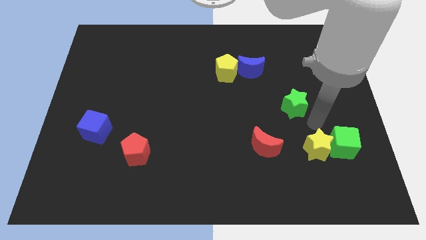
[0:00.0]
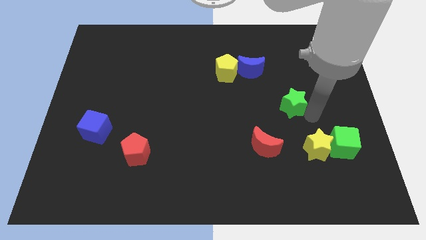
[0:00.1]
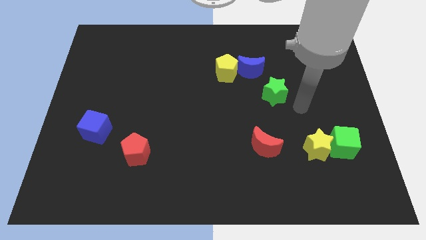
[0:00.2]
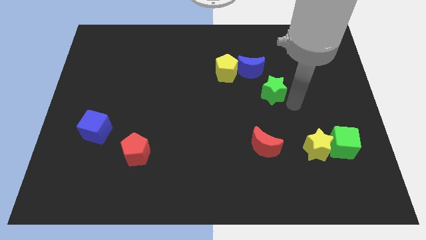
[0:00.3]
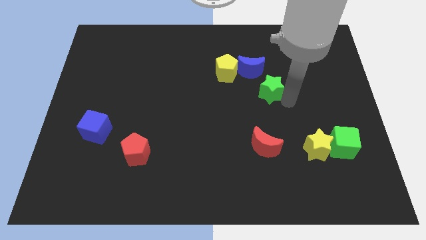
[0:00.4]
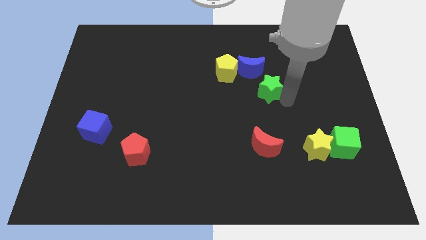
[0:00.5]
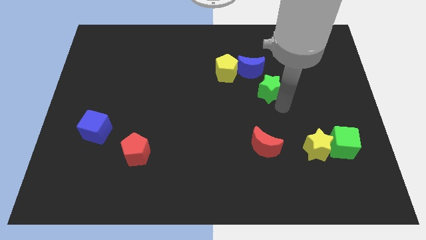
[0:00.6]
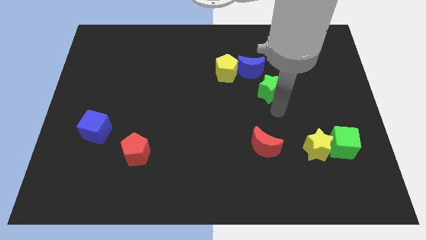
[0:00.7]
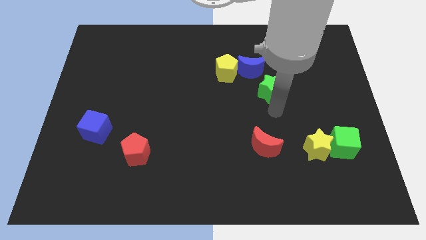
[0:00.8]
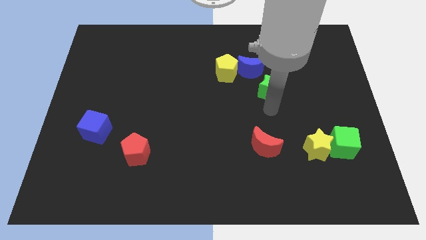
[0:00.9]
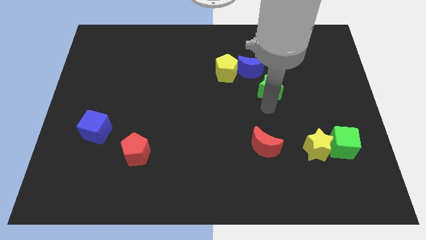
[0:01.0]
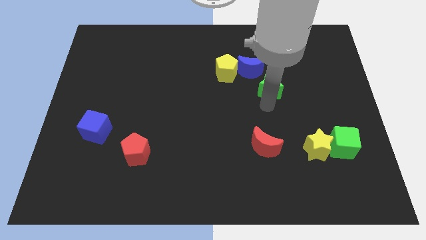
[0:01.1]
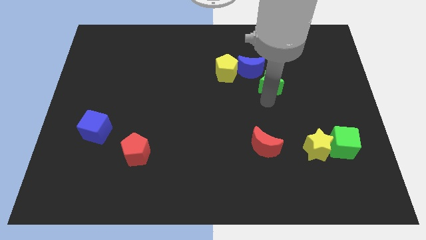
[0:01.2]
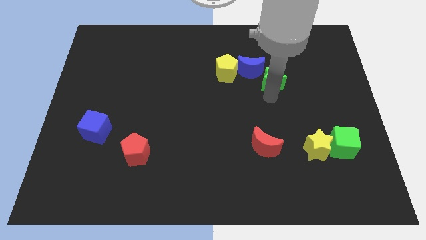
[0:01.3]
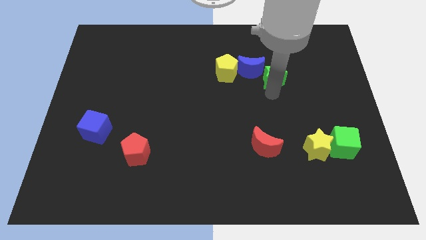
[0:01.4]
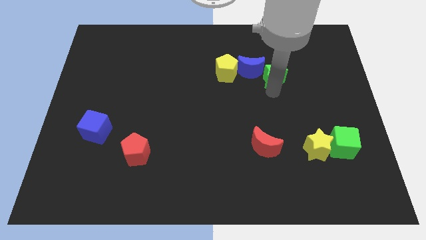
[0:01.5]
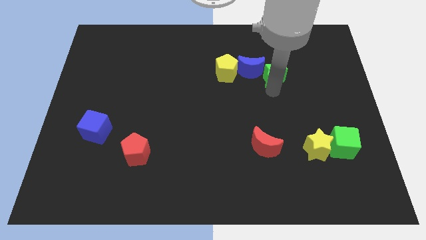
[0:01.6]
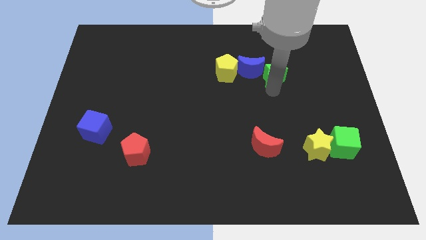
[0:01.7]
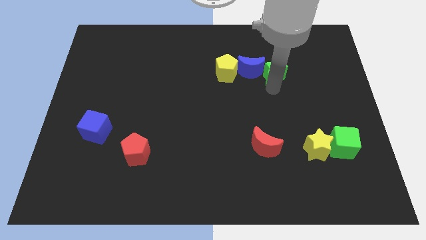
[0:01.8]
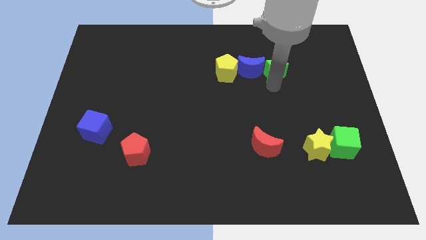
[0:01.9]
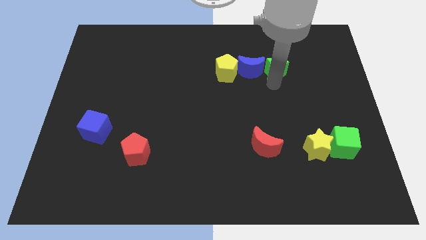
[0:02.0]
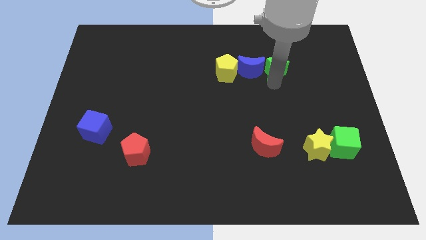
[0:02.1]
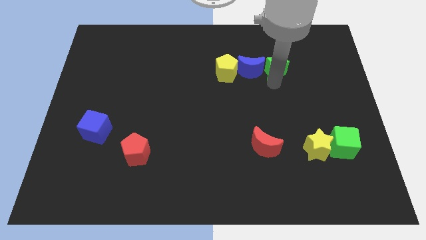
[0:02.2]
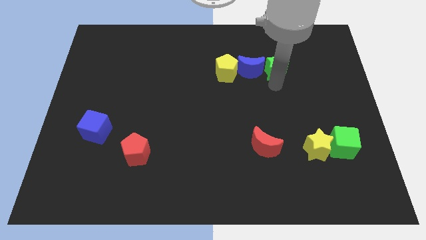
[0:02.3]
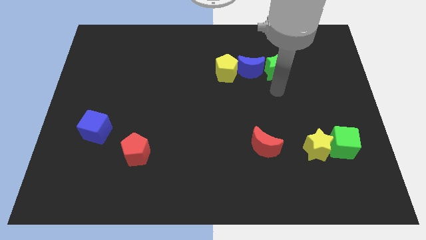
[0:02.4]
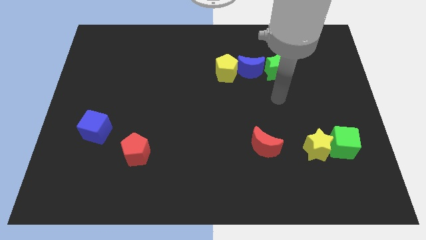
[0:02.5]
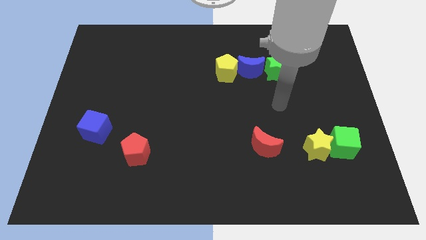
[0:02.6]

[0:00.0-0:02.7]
push the green star to the right of the blue moon

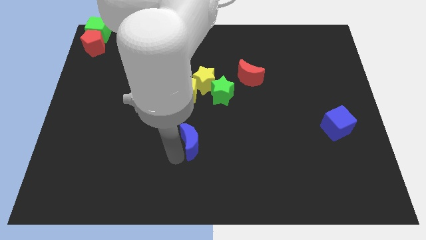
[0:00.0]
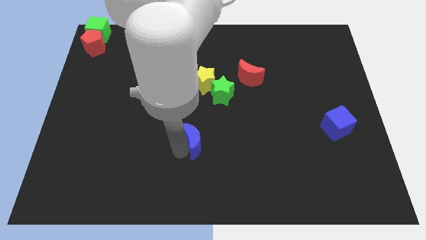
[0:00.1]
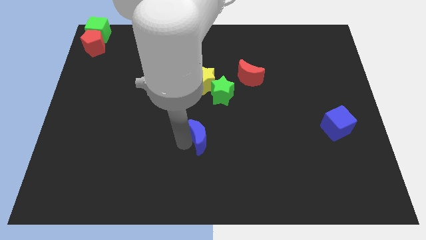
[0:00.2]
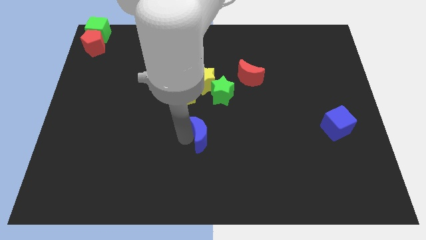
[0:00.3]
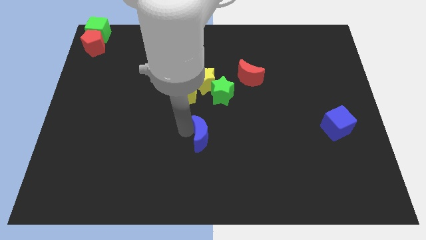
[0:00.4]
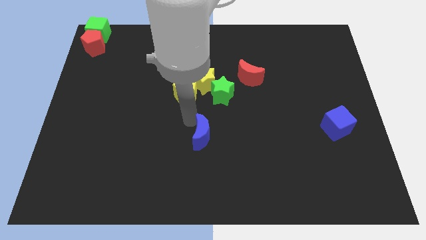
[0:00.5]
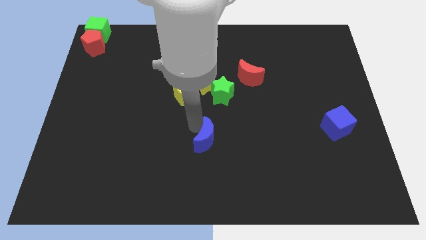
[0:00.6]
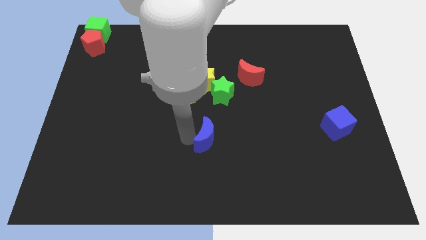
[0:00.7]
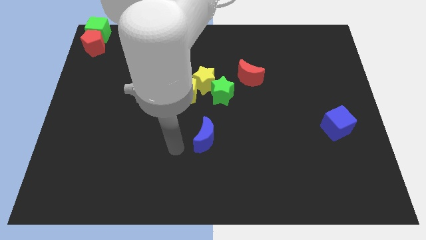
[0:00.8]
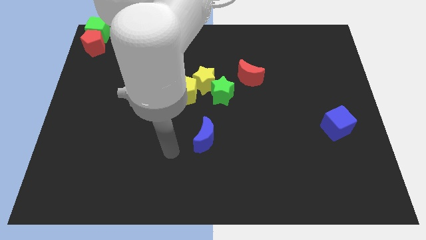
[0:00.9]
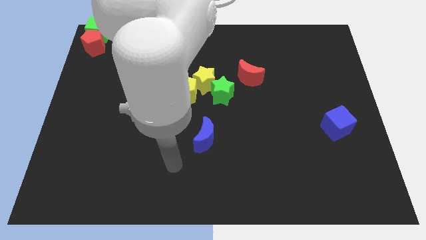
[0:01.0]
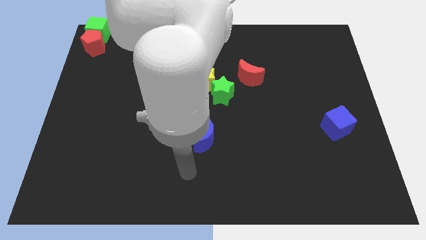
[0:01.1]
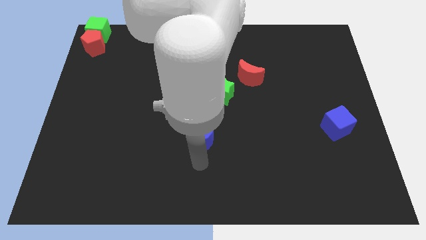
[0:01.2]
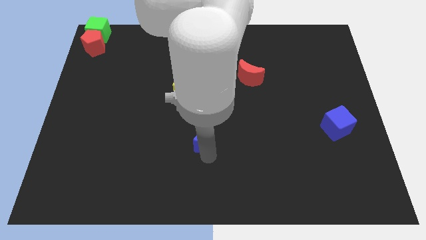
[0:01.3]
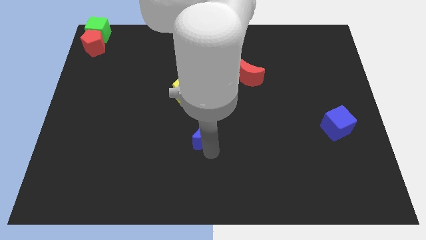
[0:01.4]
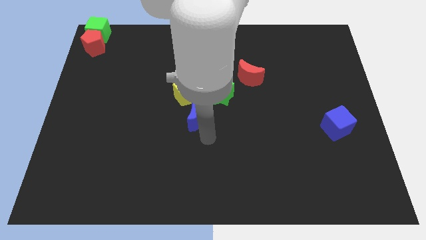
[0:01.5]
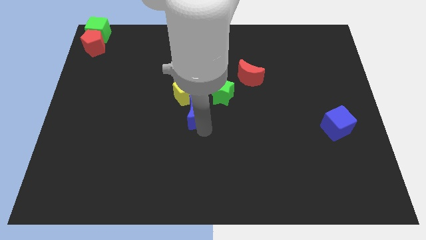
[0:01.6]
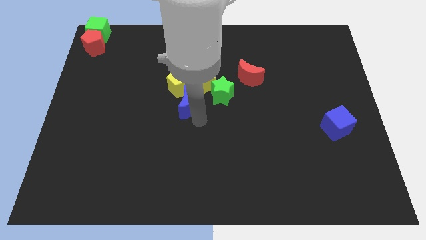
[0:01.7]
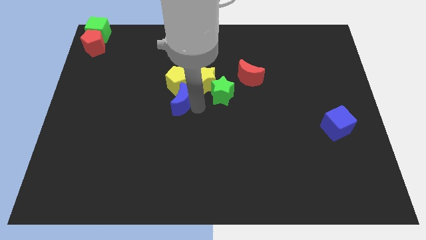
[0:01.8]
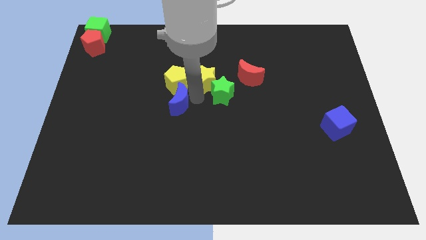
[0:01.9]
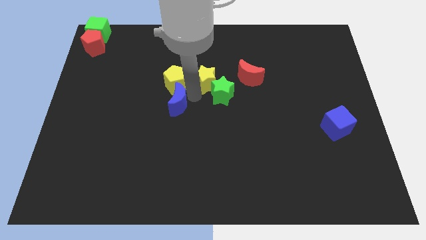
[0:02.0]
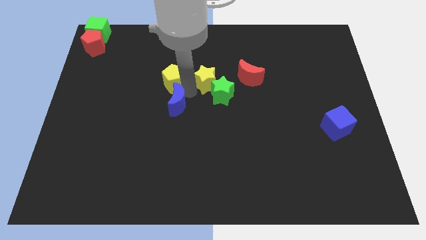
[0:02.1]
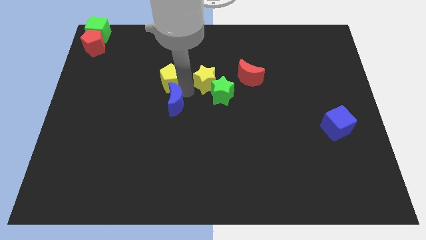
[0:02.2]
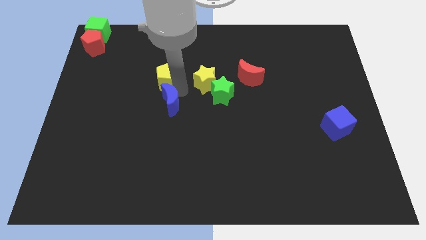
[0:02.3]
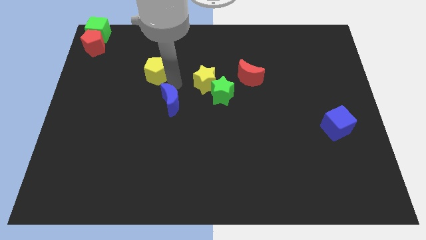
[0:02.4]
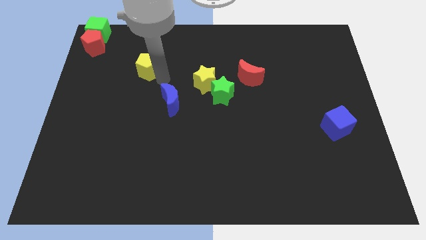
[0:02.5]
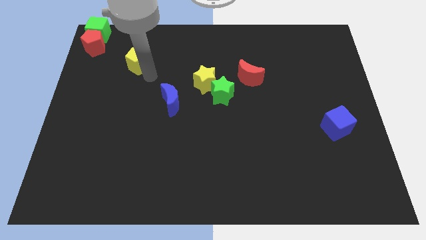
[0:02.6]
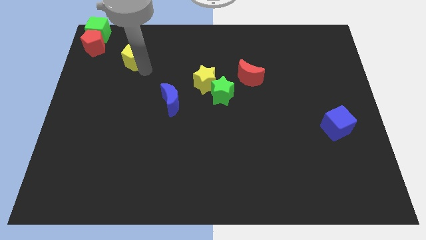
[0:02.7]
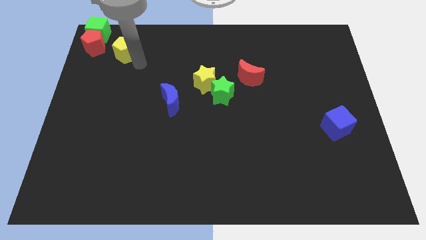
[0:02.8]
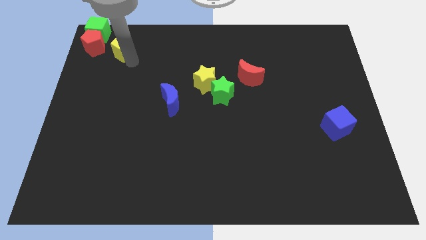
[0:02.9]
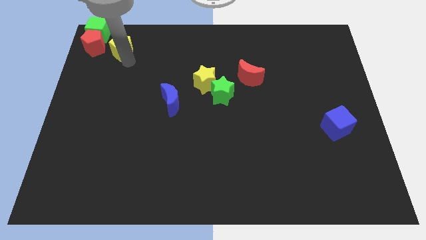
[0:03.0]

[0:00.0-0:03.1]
move yellow pentagon to the top left

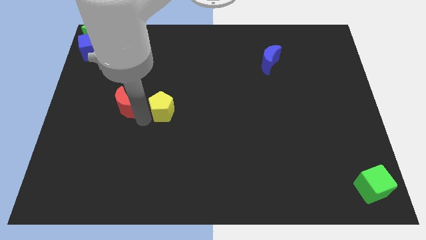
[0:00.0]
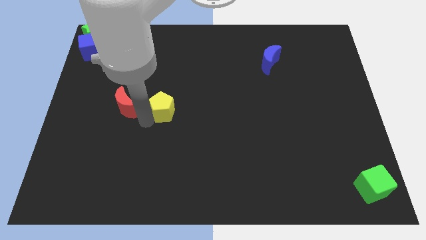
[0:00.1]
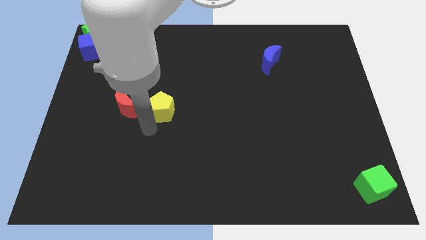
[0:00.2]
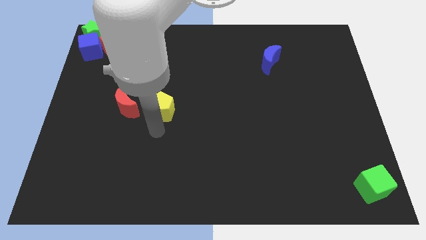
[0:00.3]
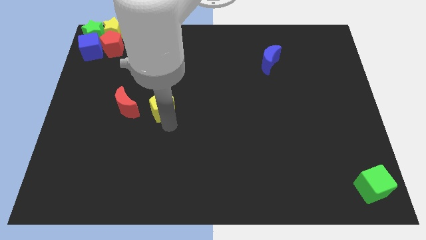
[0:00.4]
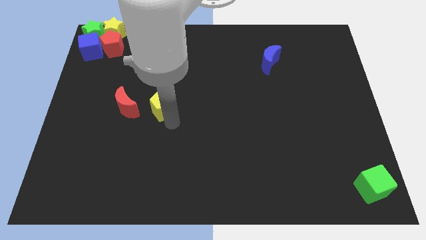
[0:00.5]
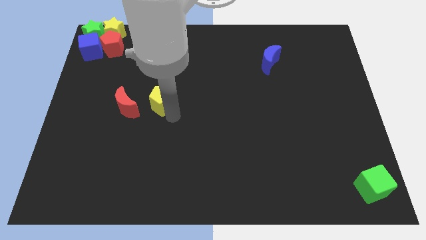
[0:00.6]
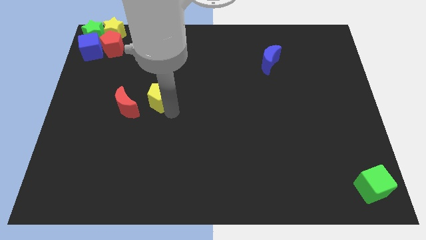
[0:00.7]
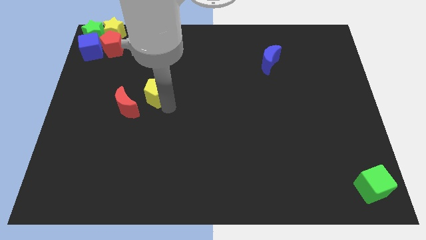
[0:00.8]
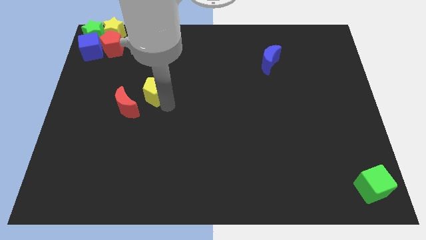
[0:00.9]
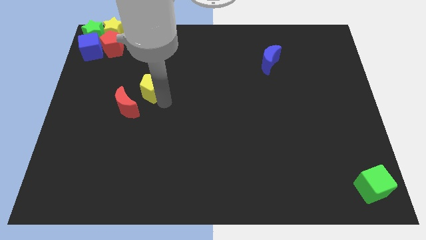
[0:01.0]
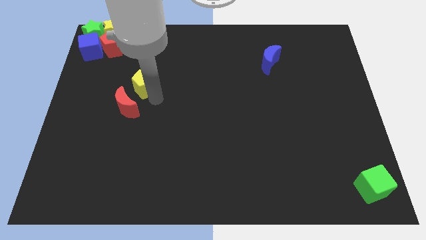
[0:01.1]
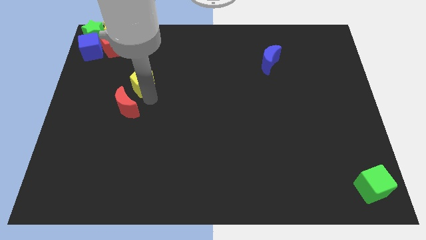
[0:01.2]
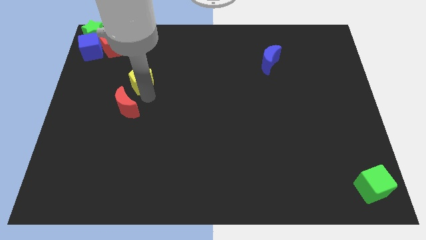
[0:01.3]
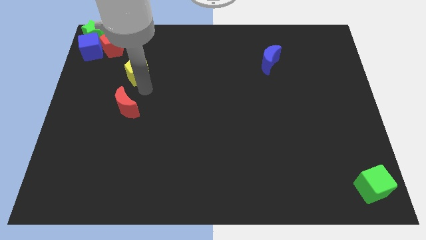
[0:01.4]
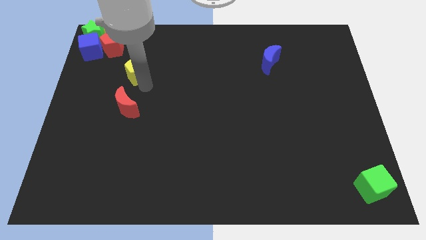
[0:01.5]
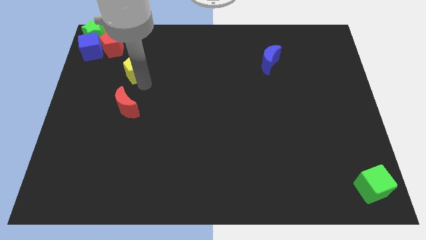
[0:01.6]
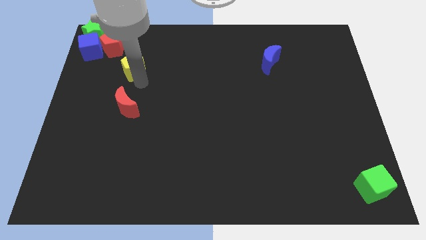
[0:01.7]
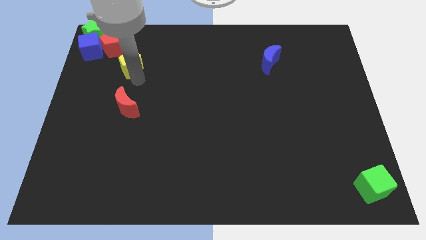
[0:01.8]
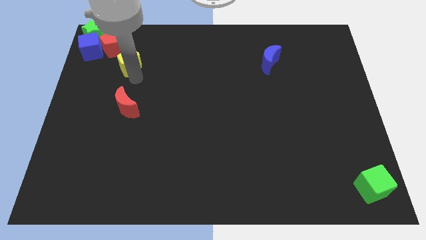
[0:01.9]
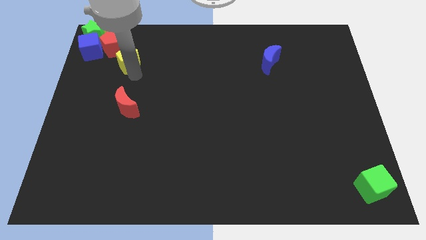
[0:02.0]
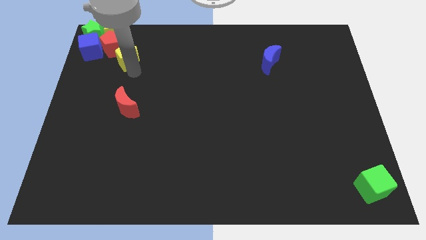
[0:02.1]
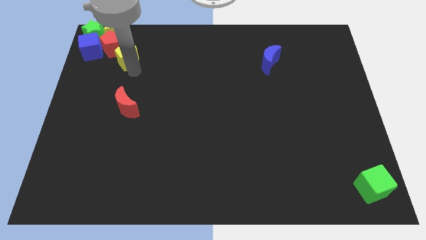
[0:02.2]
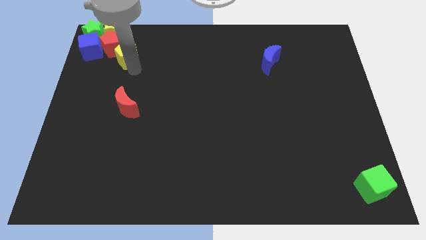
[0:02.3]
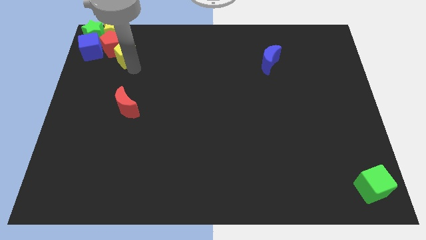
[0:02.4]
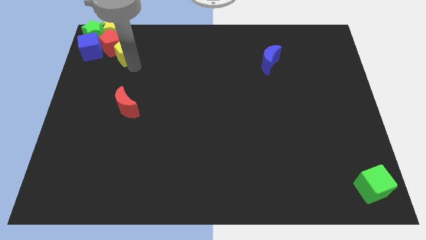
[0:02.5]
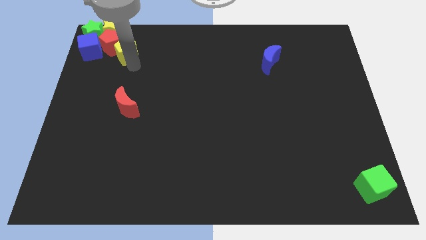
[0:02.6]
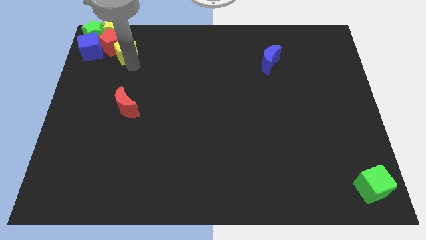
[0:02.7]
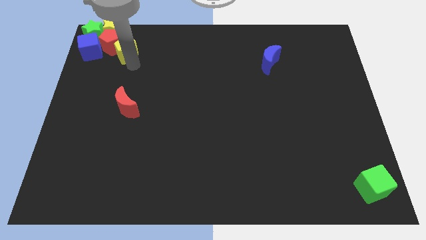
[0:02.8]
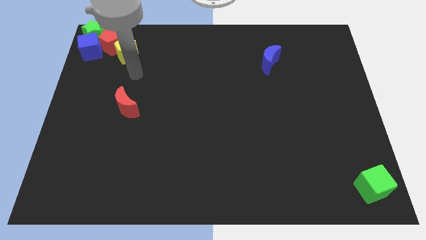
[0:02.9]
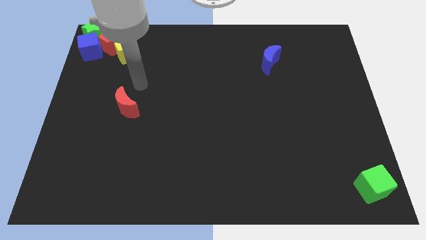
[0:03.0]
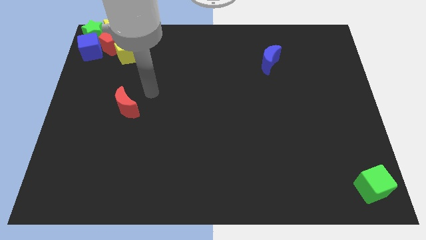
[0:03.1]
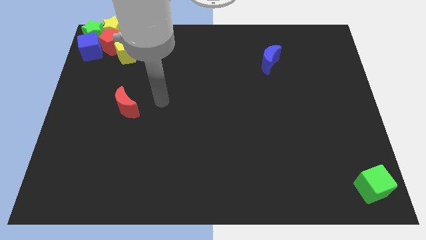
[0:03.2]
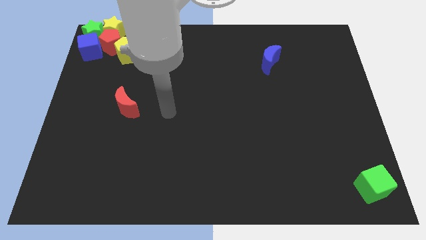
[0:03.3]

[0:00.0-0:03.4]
push the yellow pentagon into the red pentagon
